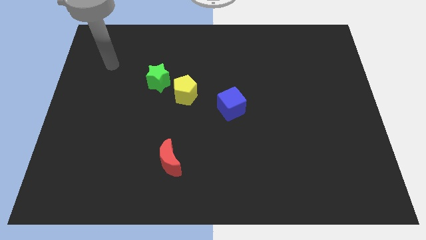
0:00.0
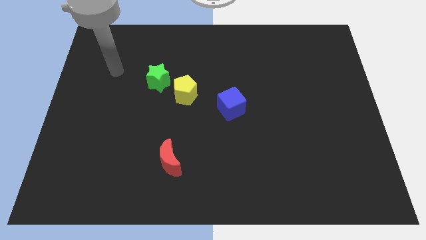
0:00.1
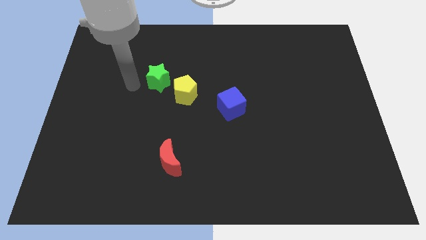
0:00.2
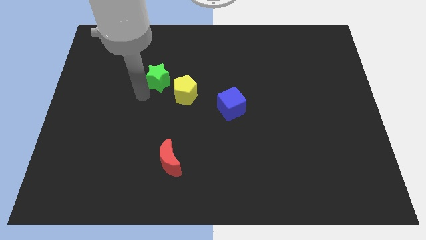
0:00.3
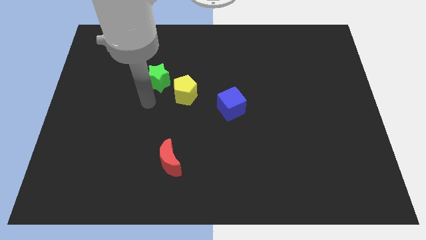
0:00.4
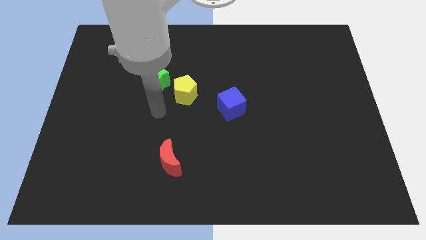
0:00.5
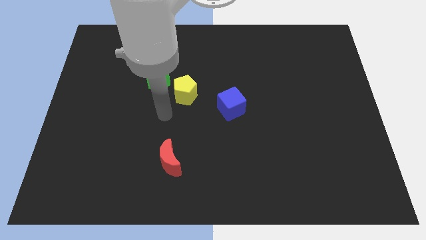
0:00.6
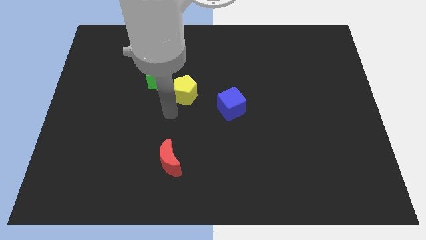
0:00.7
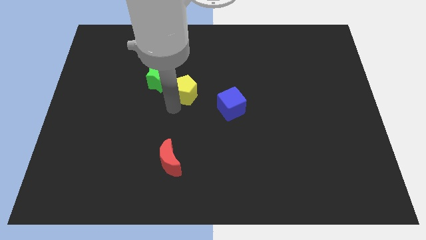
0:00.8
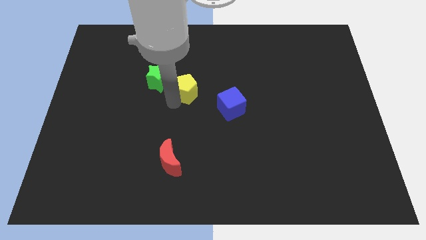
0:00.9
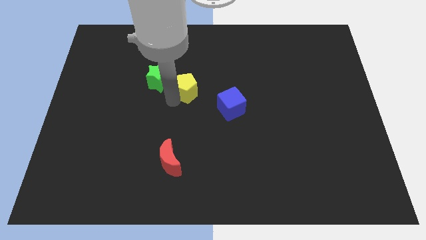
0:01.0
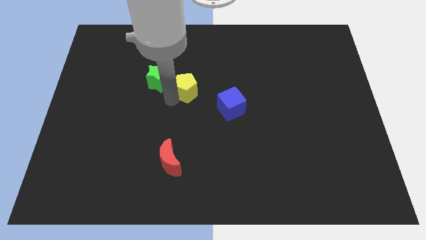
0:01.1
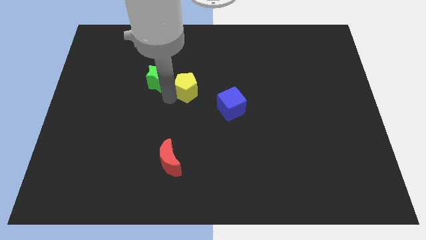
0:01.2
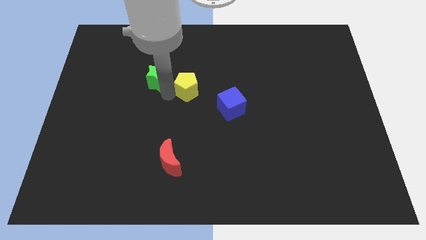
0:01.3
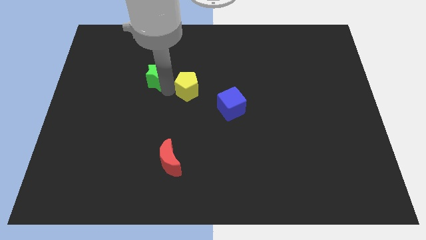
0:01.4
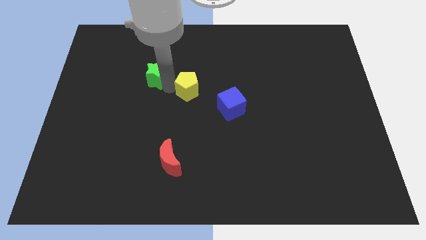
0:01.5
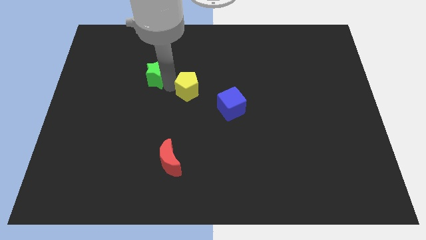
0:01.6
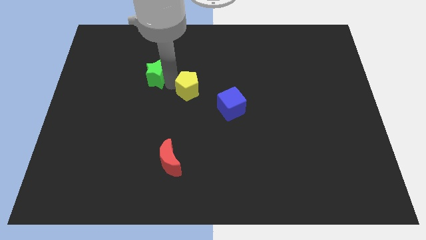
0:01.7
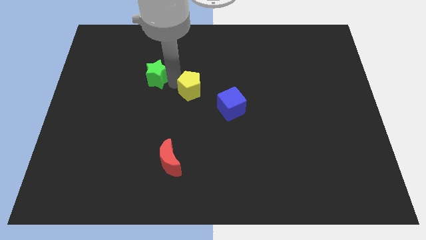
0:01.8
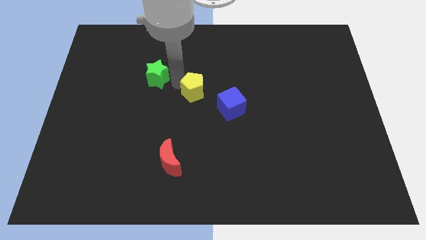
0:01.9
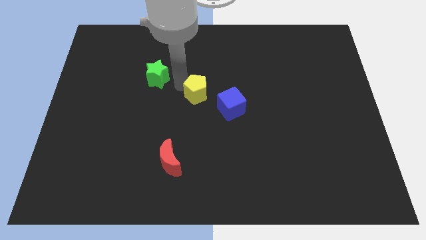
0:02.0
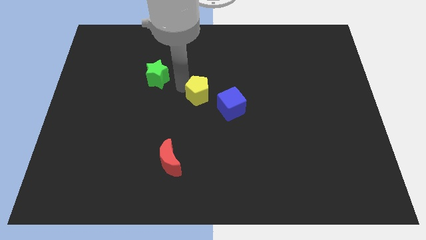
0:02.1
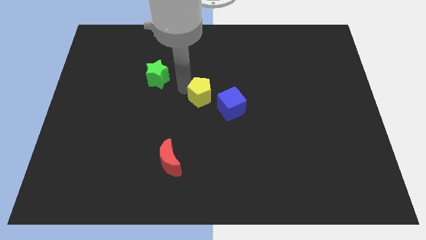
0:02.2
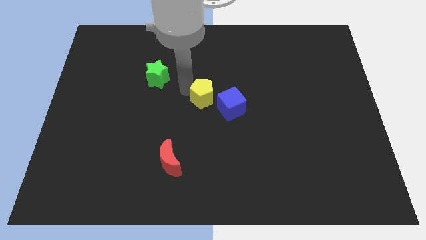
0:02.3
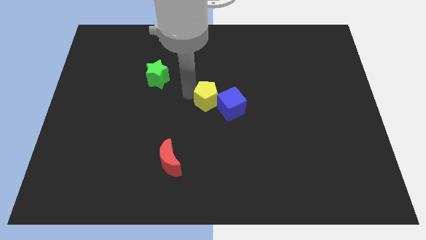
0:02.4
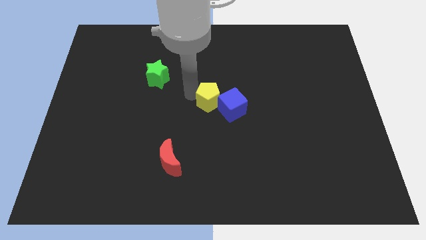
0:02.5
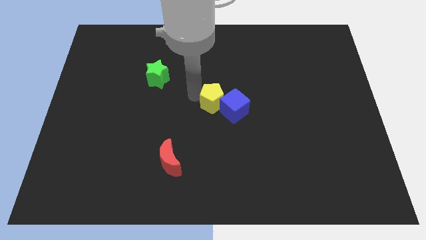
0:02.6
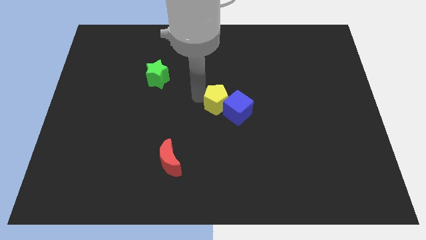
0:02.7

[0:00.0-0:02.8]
slide the pentagon next to the blue cube

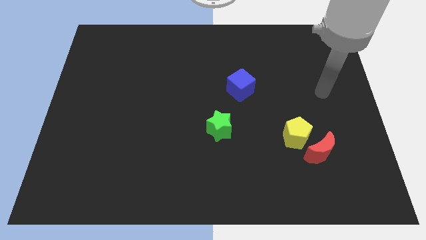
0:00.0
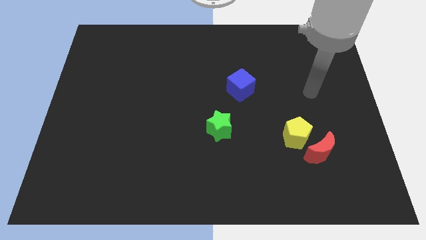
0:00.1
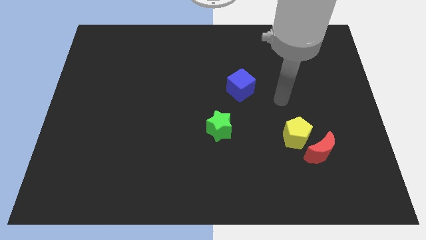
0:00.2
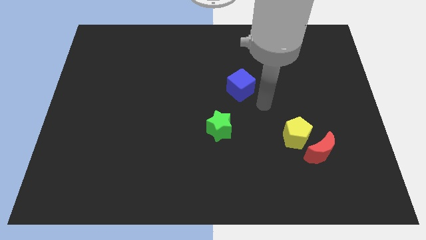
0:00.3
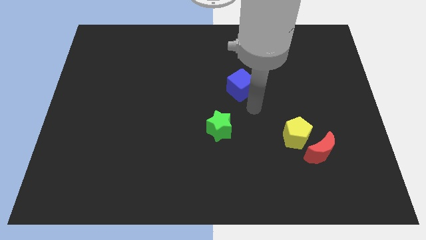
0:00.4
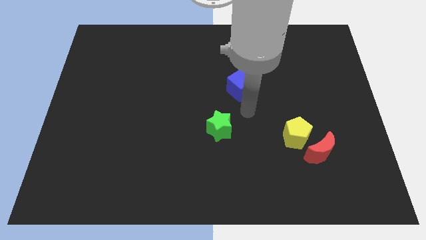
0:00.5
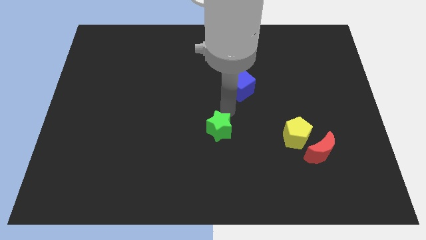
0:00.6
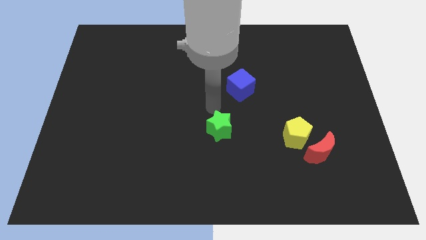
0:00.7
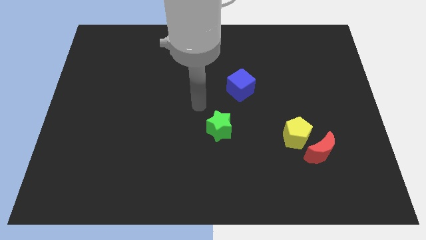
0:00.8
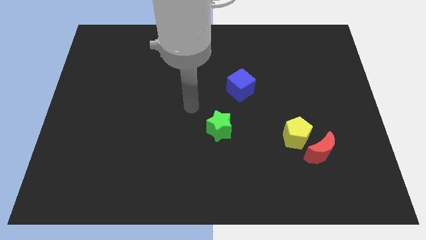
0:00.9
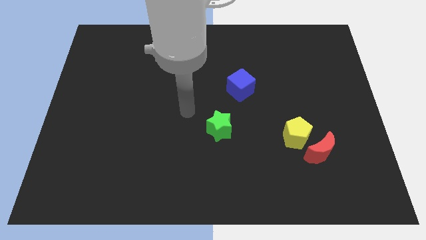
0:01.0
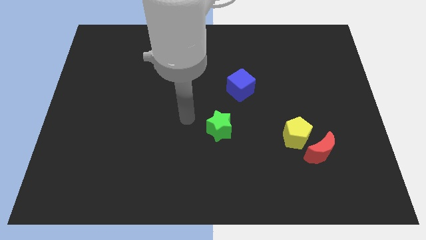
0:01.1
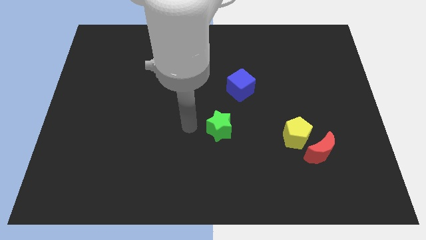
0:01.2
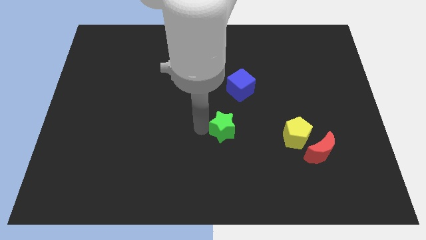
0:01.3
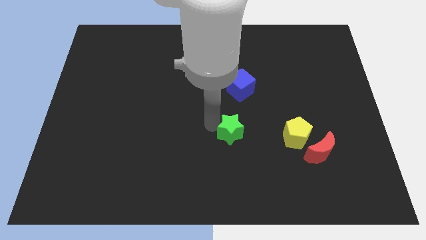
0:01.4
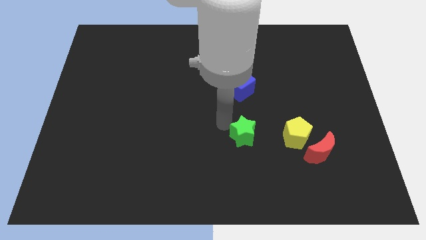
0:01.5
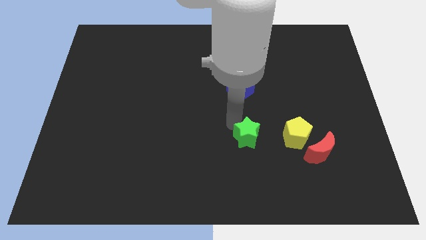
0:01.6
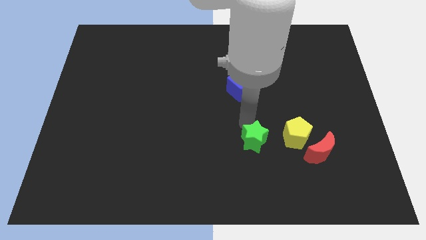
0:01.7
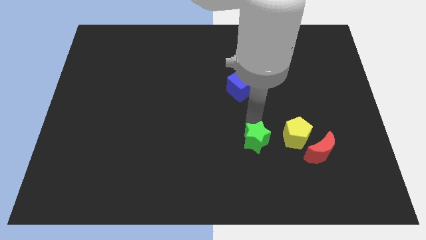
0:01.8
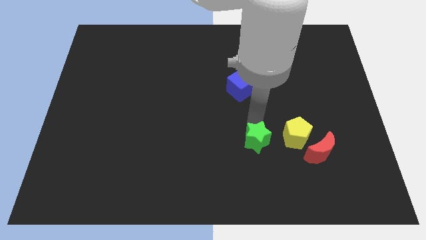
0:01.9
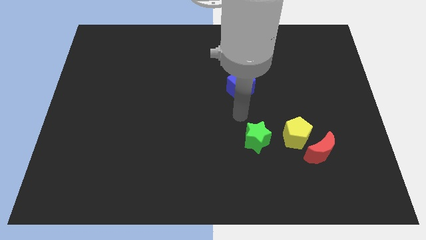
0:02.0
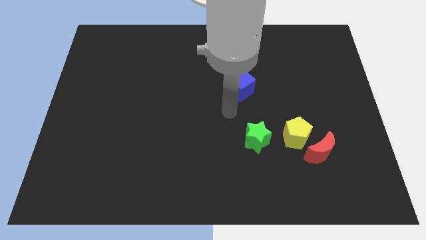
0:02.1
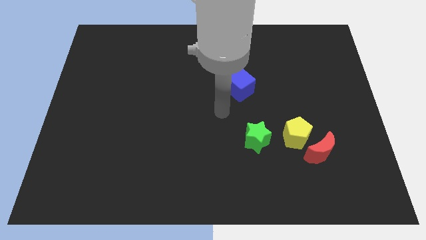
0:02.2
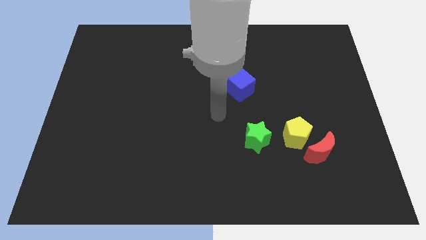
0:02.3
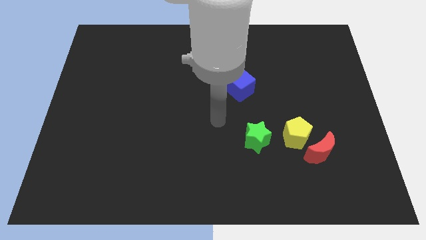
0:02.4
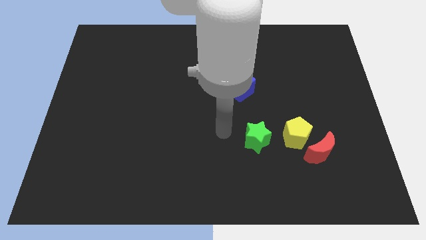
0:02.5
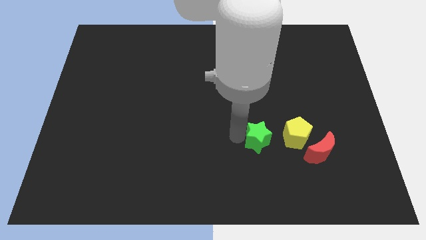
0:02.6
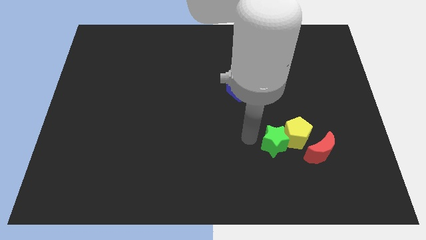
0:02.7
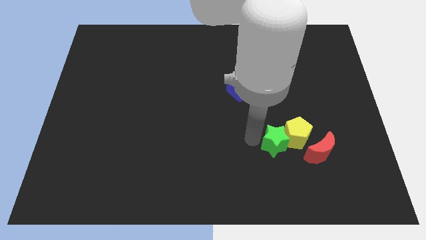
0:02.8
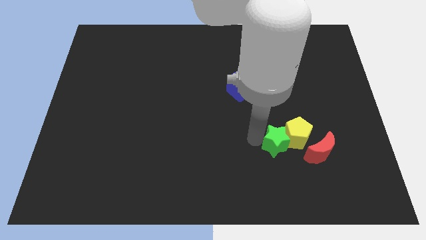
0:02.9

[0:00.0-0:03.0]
slide the star next to the yellow pentagon

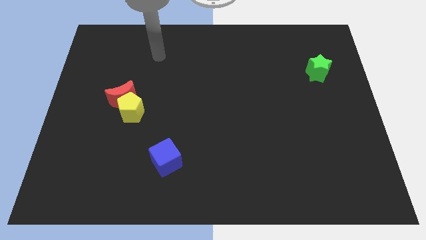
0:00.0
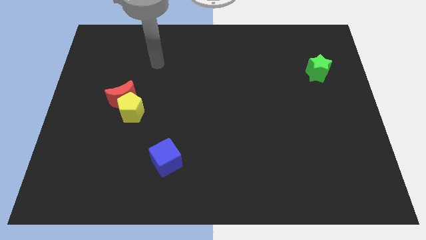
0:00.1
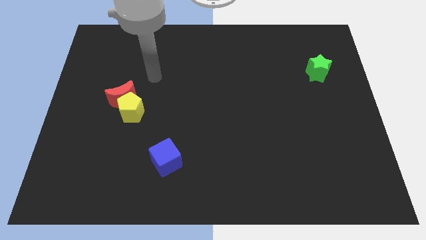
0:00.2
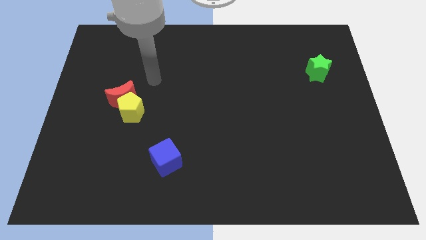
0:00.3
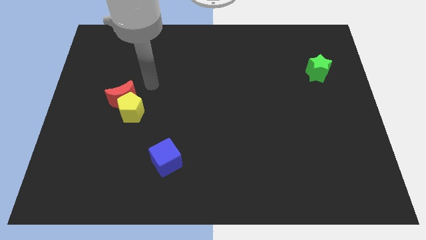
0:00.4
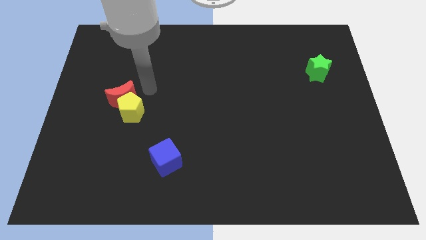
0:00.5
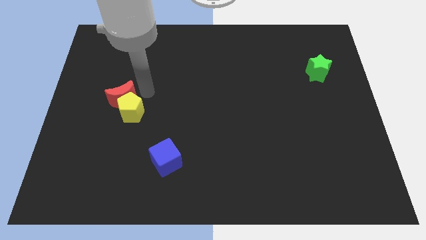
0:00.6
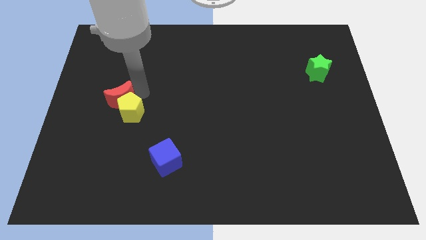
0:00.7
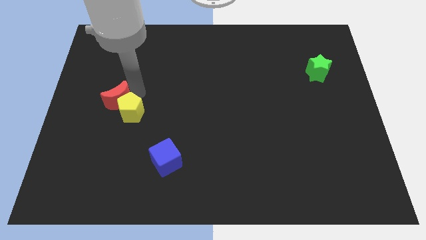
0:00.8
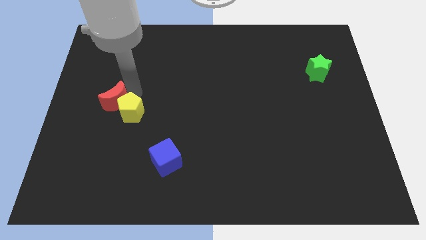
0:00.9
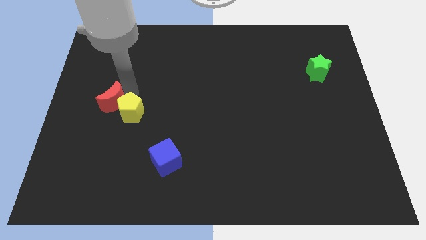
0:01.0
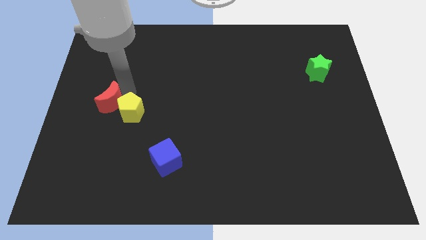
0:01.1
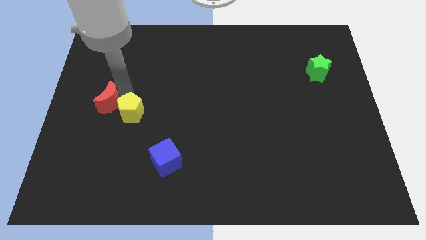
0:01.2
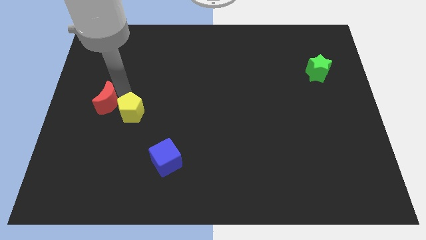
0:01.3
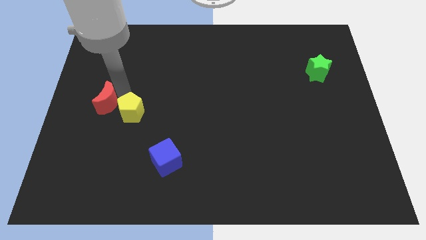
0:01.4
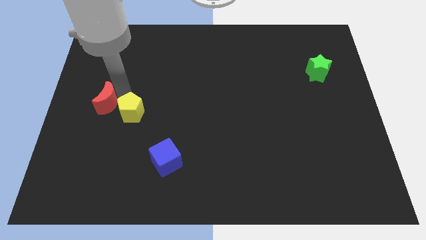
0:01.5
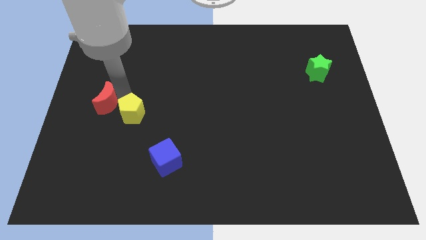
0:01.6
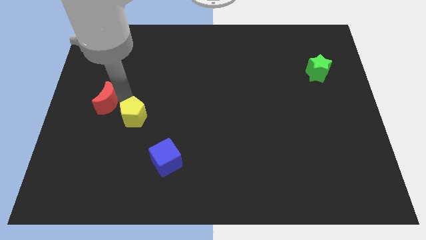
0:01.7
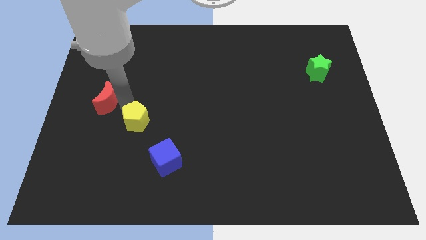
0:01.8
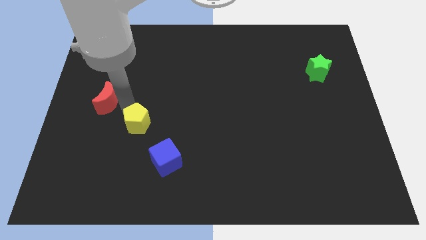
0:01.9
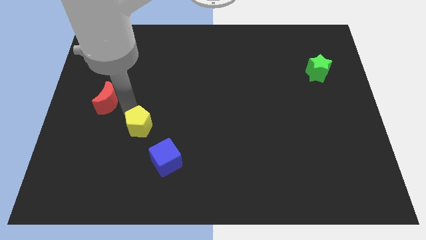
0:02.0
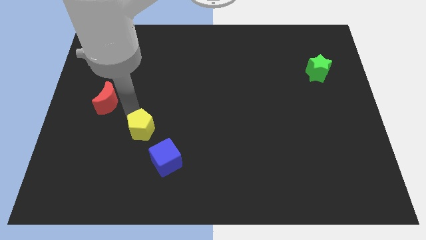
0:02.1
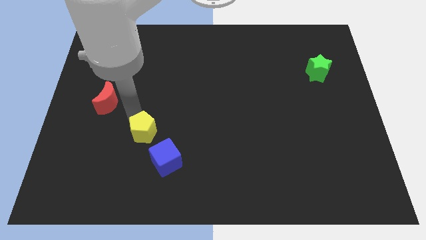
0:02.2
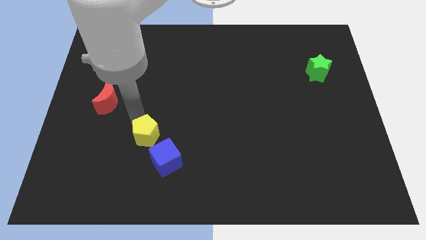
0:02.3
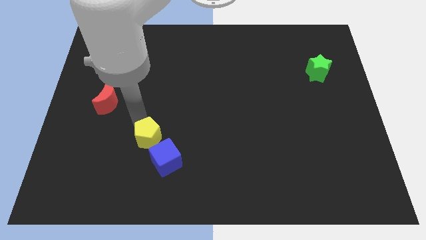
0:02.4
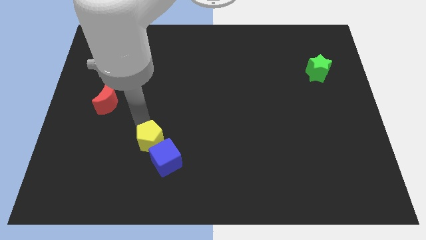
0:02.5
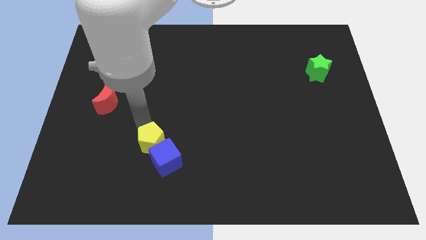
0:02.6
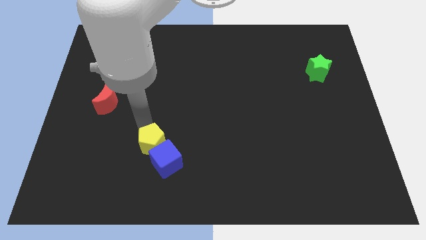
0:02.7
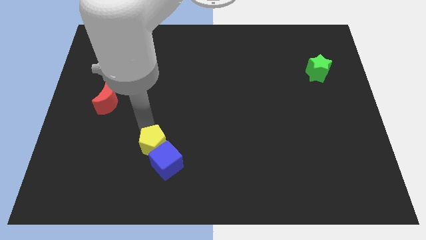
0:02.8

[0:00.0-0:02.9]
move the yellow block next to the blue block
